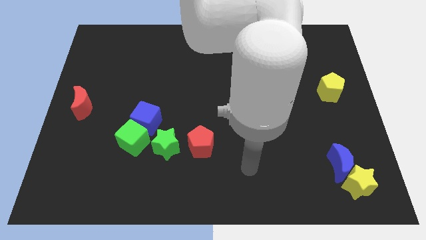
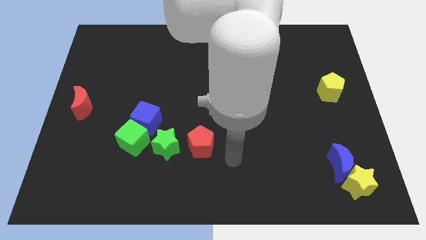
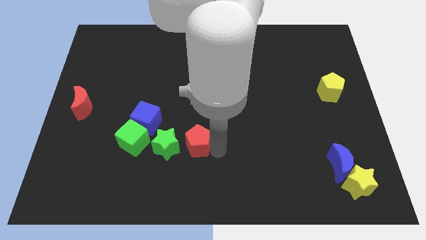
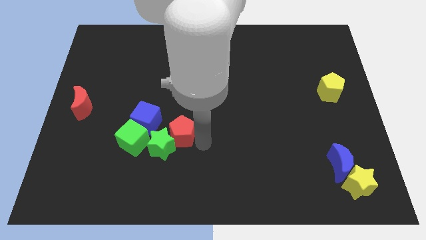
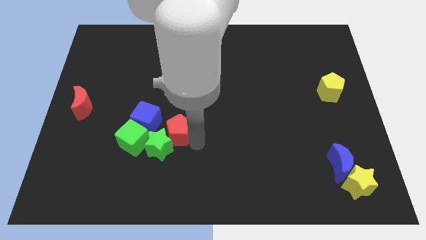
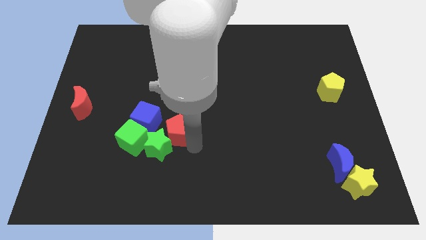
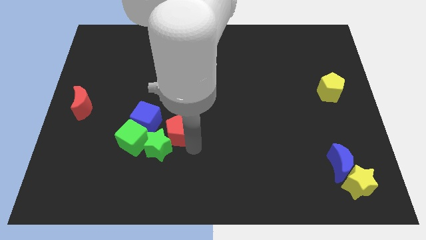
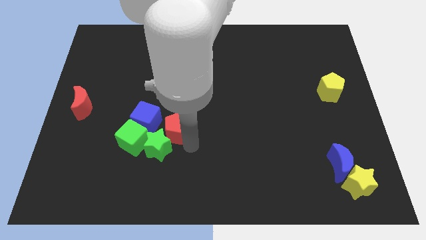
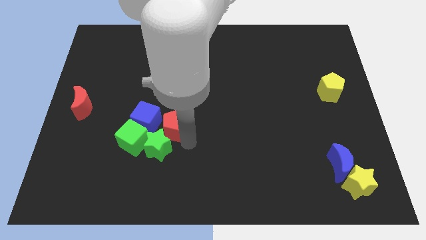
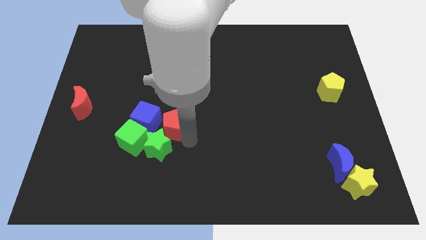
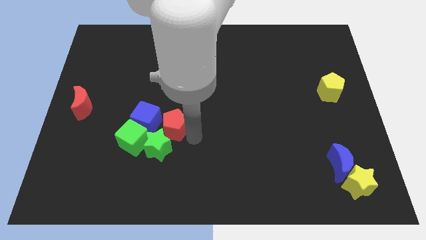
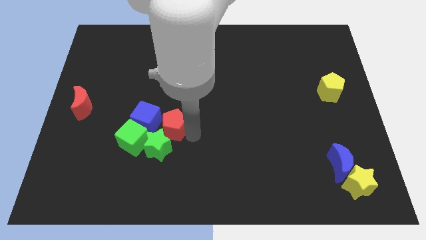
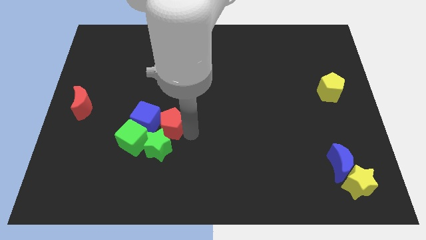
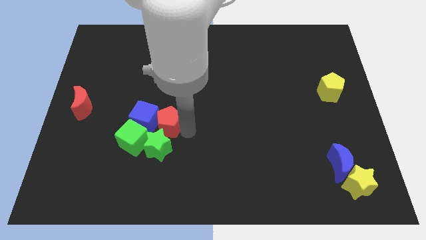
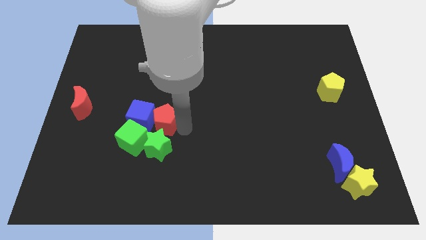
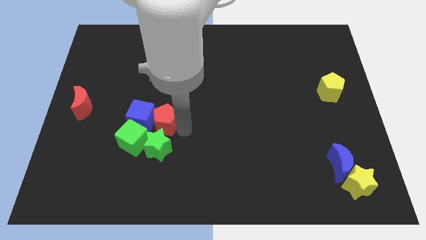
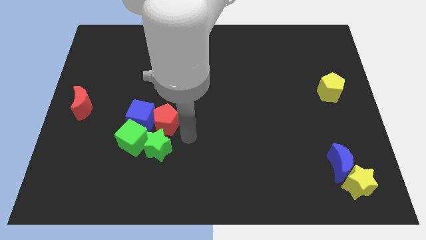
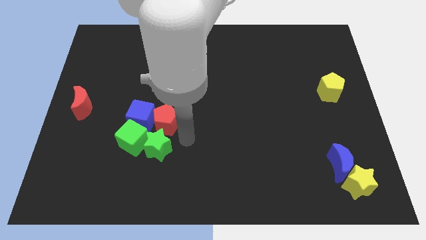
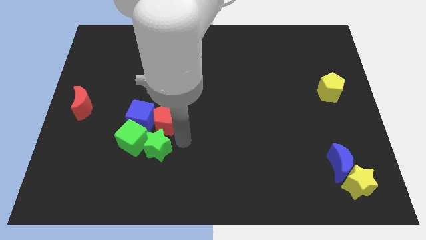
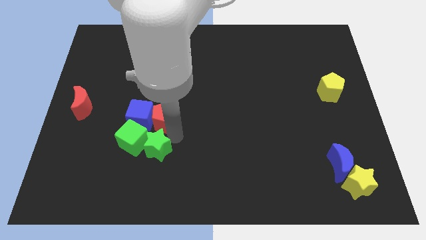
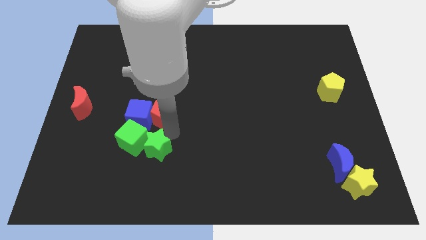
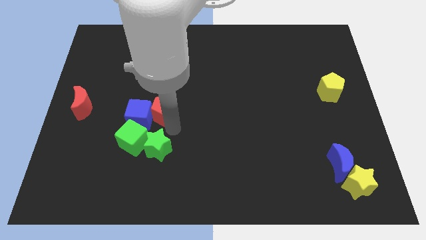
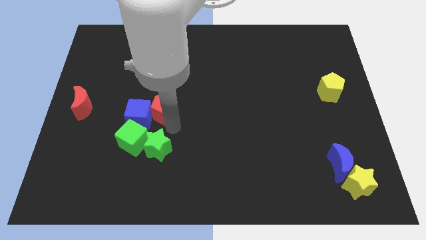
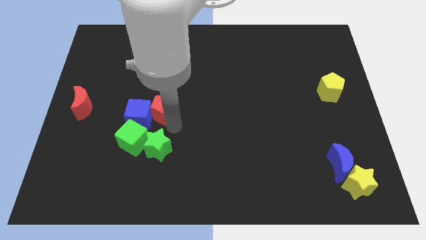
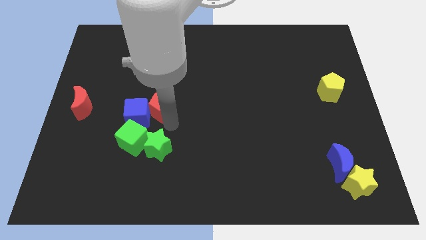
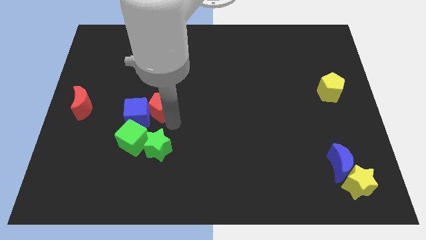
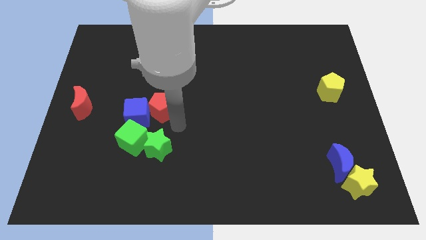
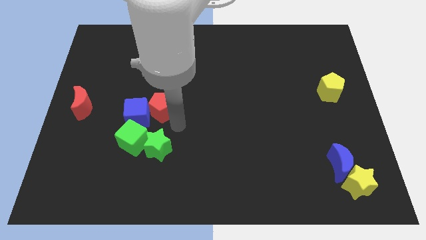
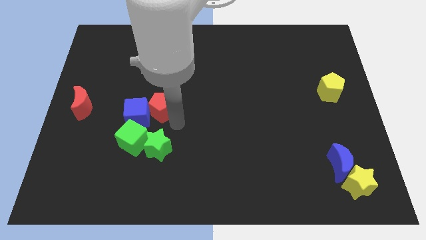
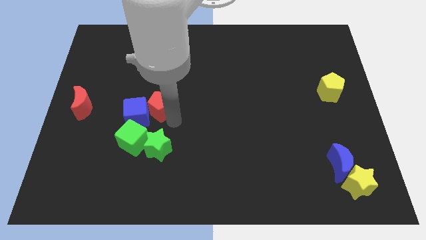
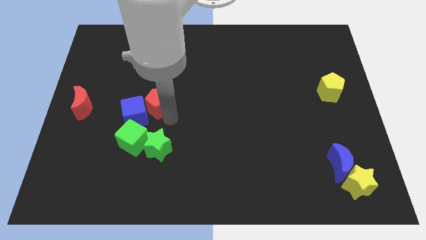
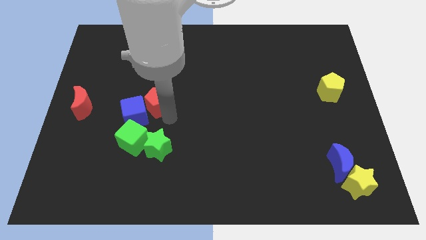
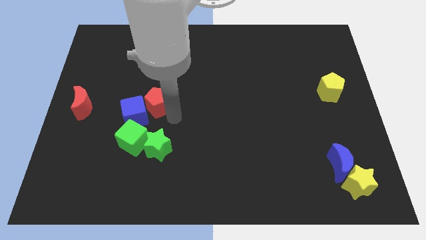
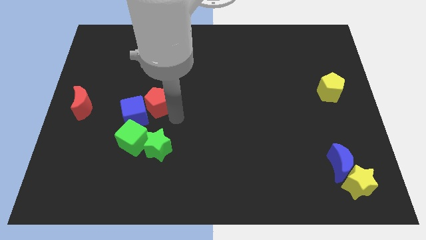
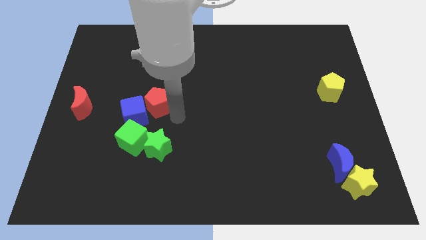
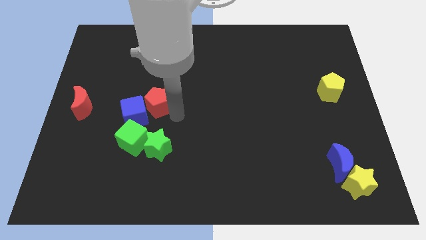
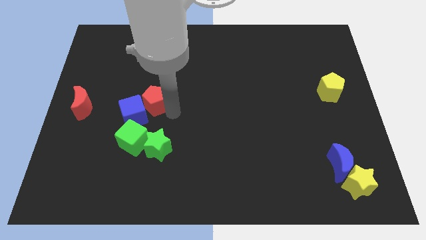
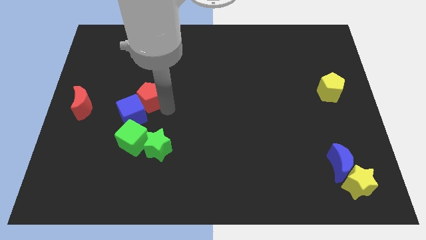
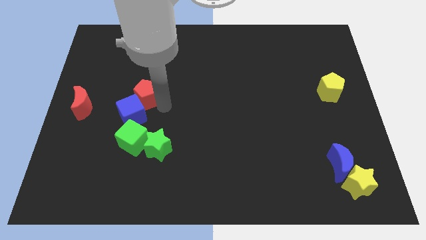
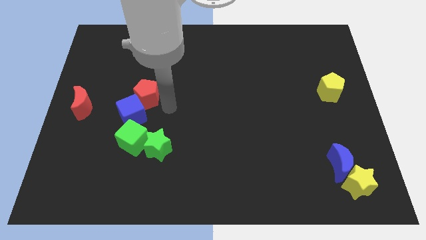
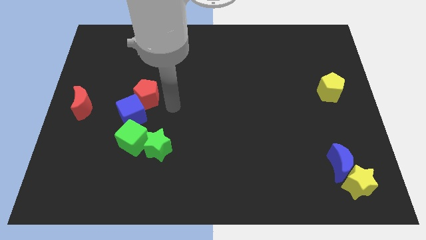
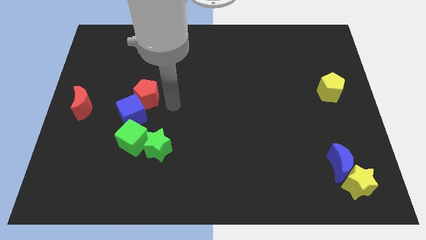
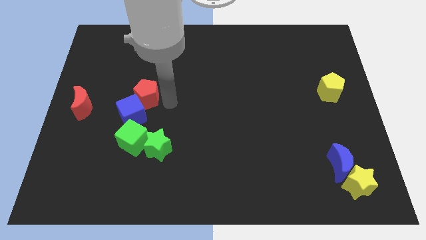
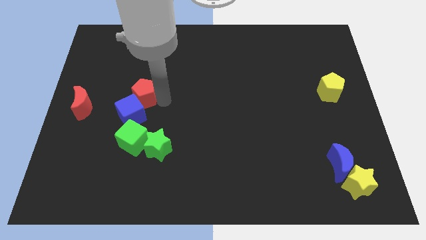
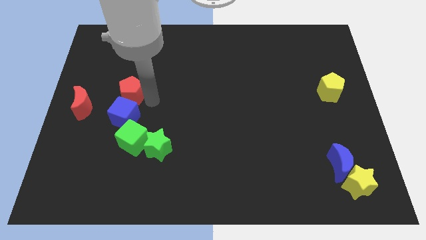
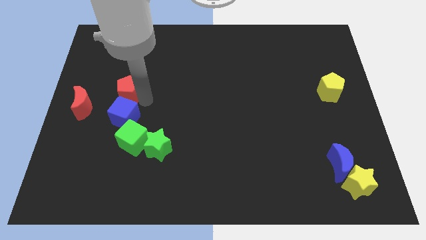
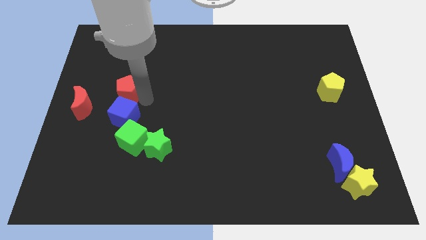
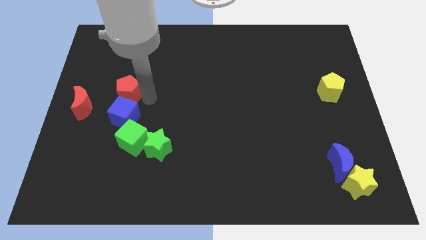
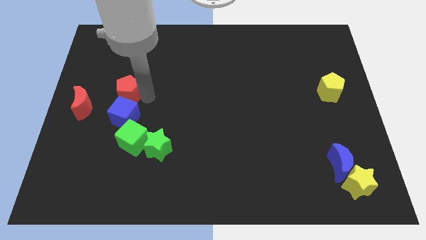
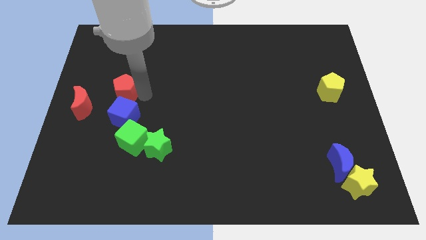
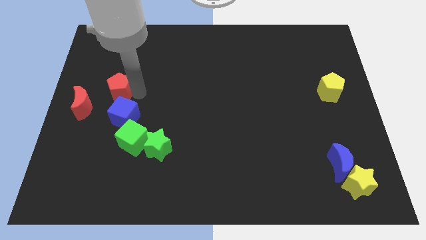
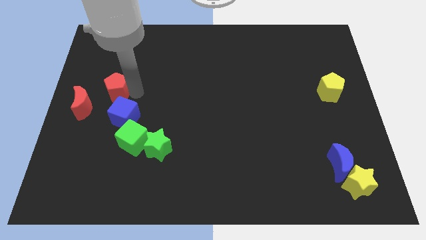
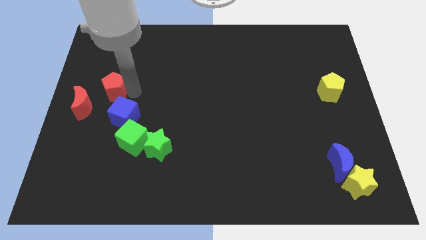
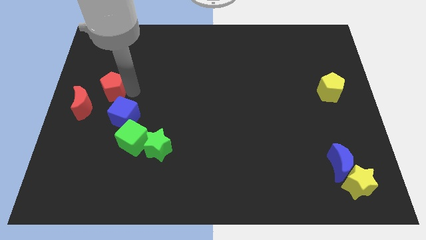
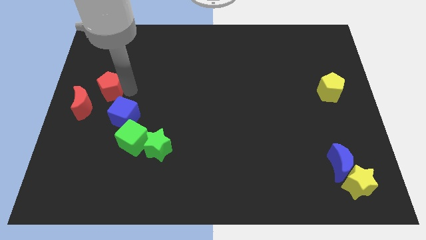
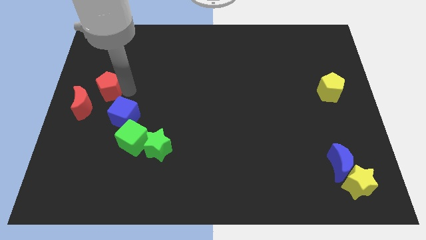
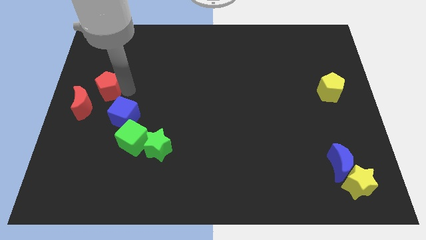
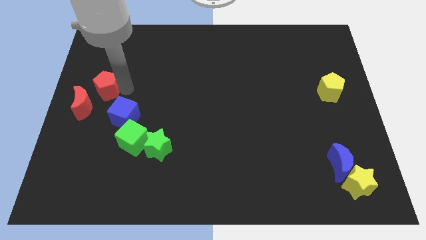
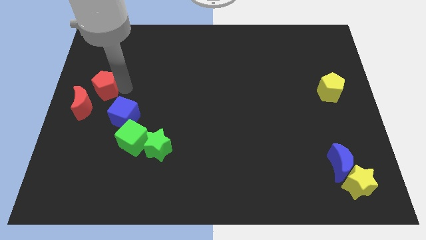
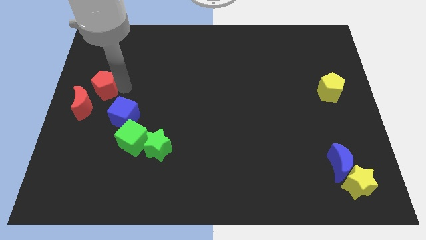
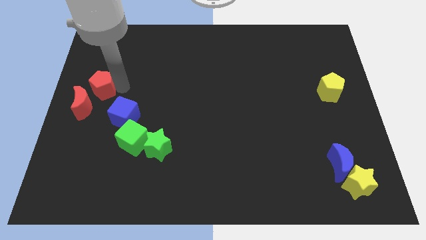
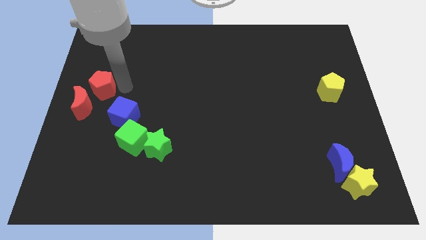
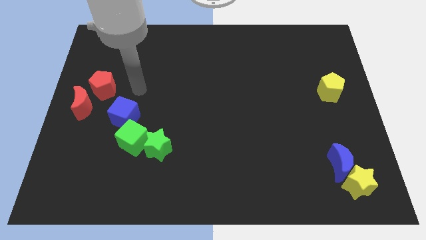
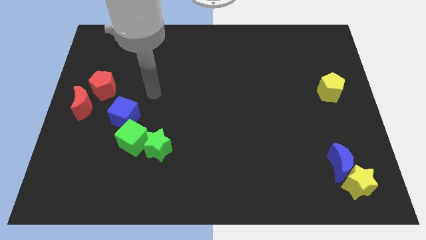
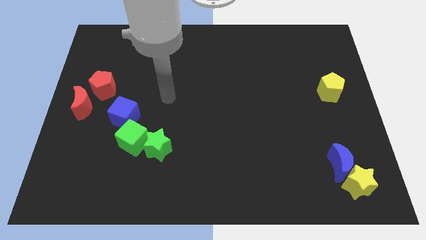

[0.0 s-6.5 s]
push the red pentagon to the top right of the red moon

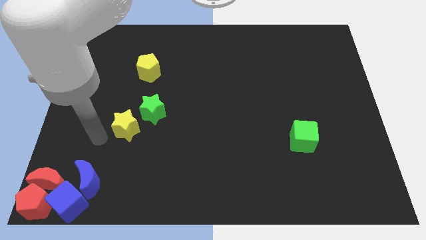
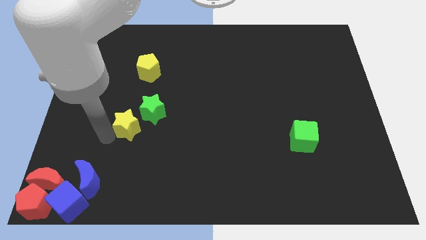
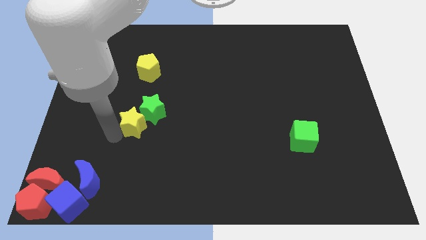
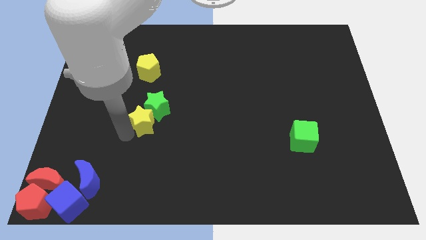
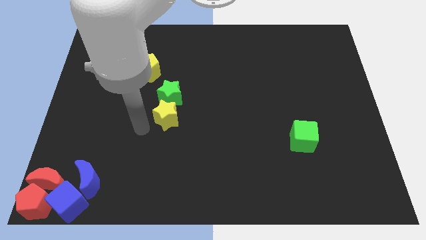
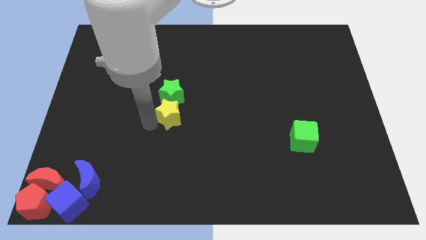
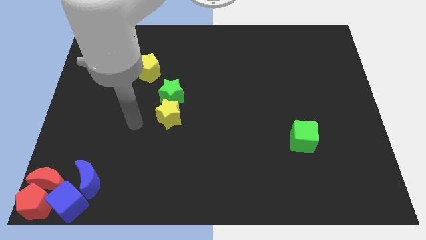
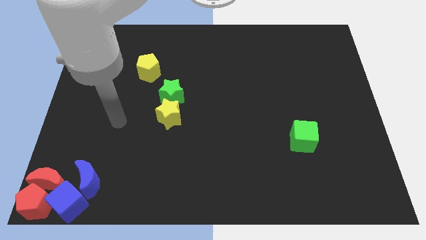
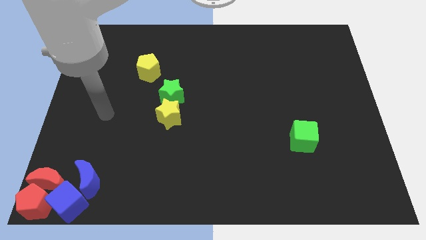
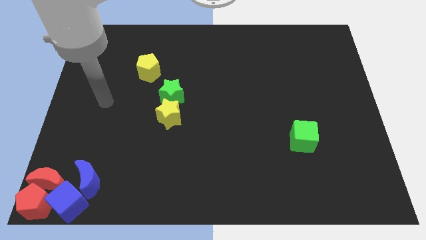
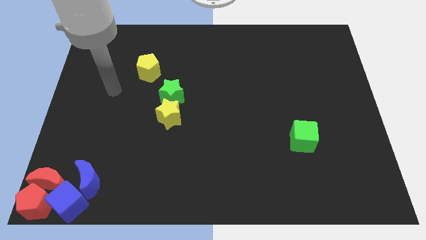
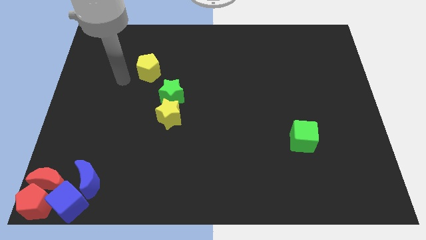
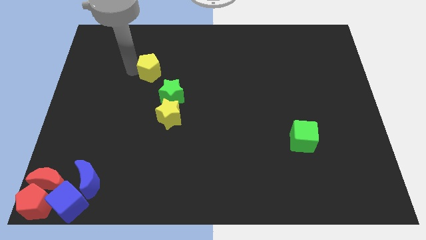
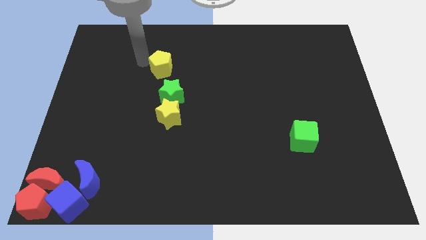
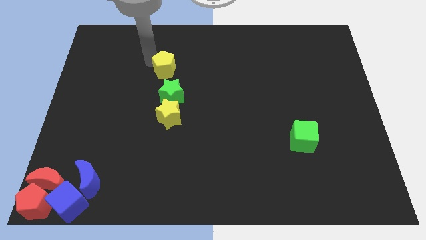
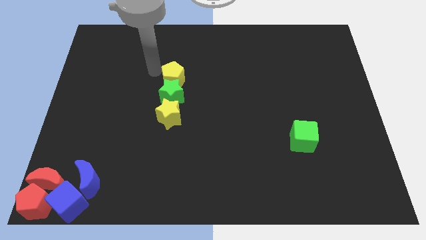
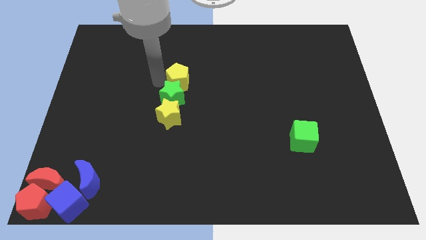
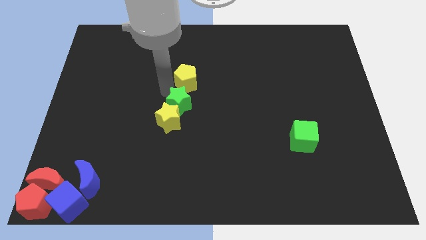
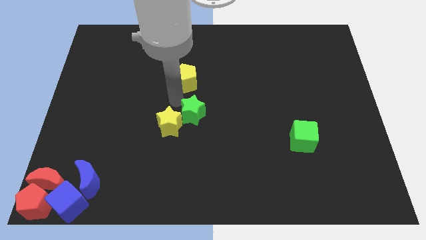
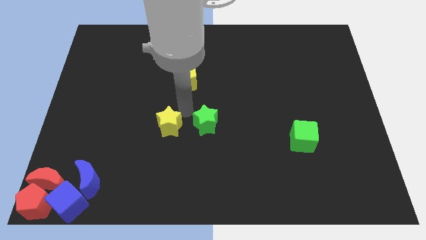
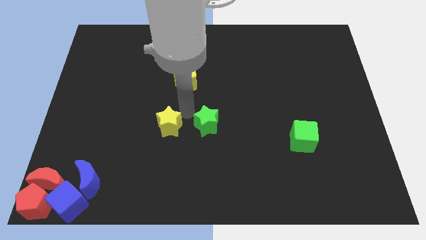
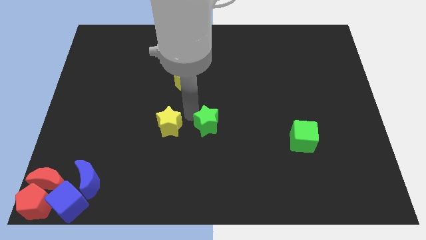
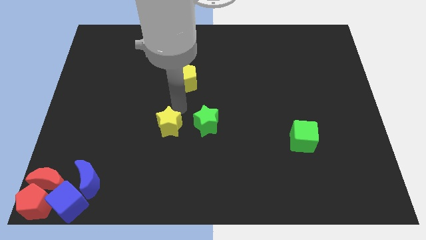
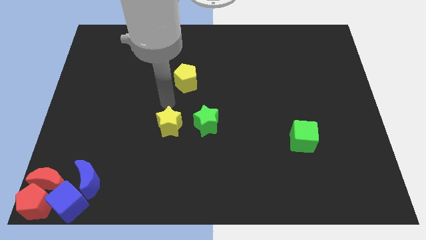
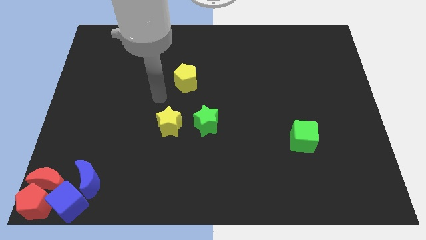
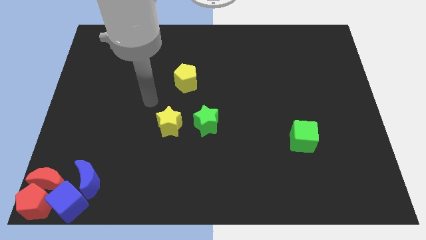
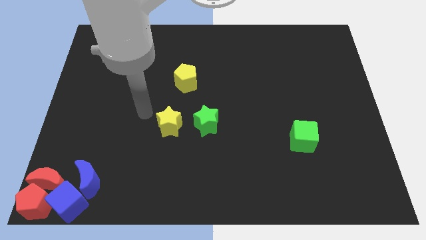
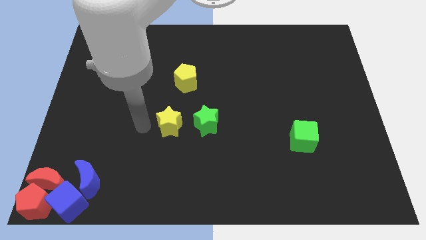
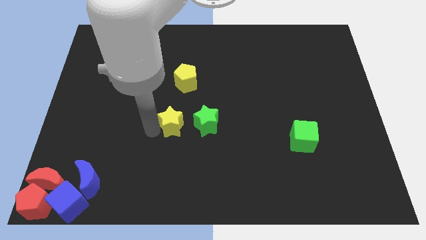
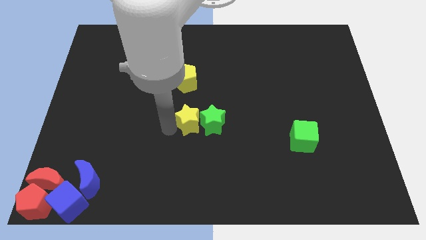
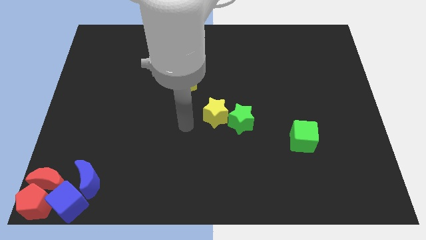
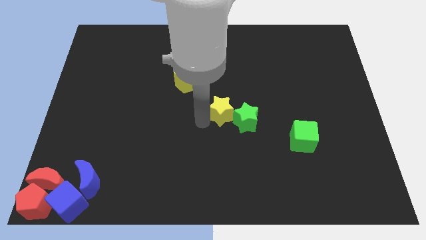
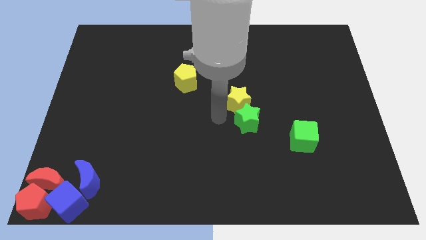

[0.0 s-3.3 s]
adjust both the stars and yellow pentagon diagonally on the top left side of the green cube
